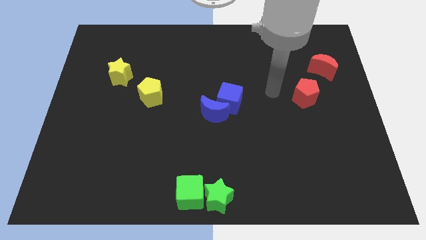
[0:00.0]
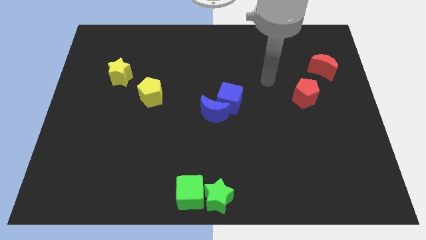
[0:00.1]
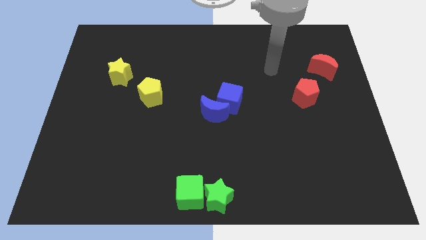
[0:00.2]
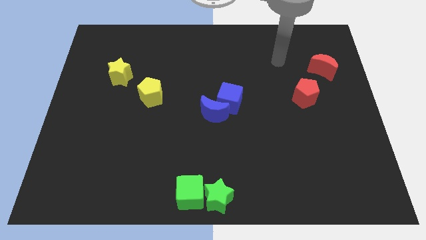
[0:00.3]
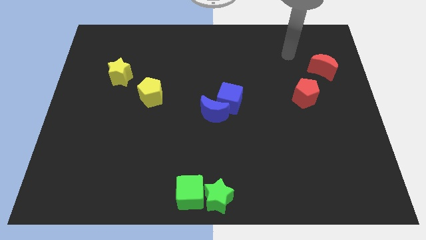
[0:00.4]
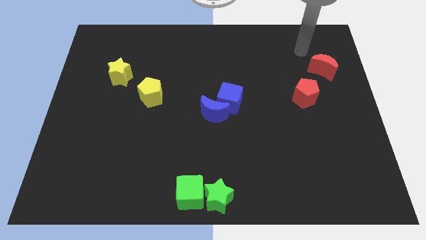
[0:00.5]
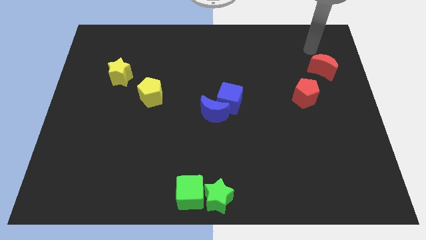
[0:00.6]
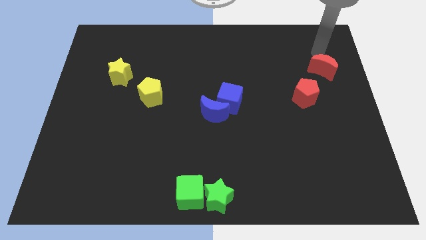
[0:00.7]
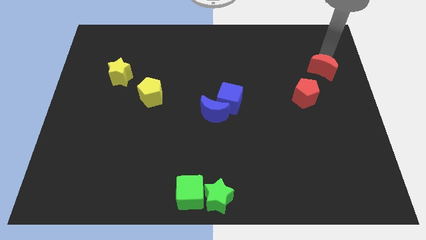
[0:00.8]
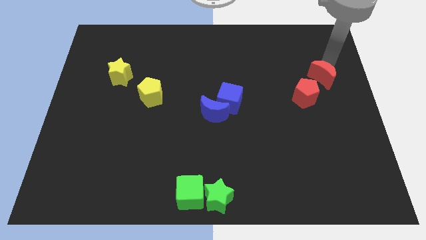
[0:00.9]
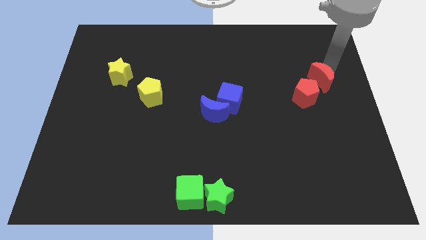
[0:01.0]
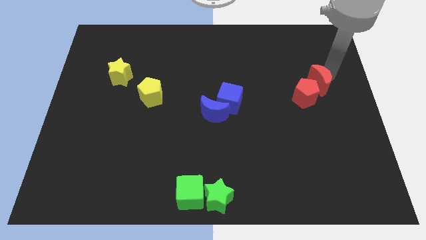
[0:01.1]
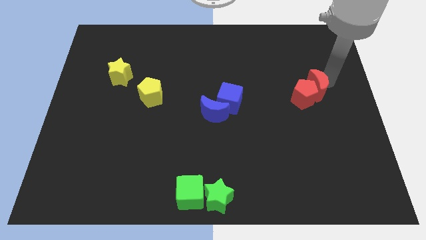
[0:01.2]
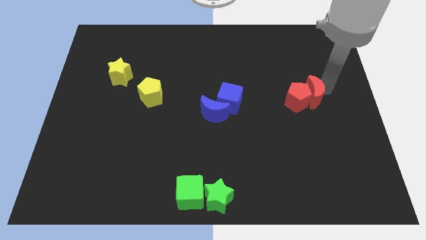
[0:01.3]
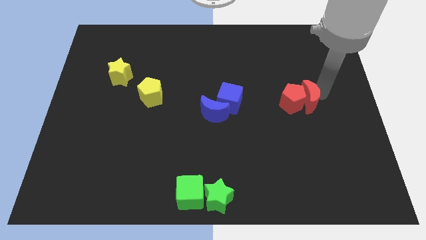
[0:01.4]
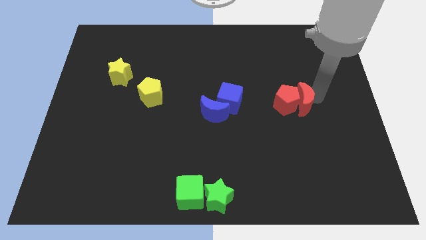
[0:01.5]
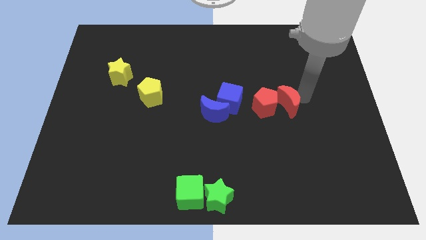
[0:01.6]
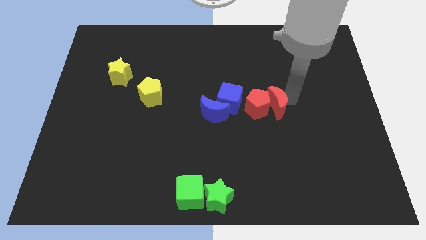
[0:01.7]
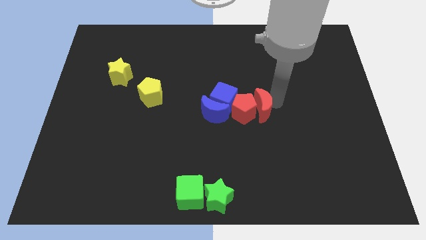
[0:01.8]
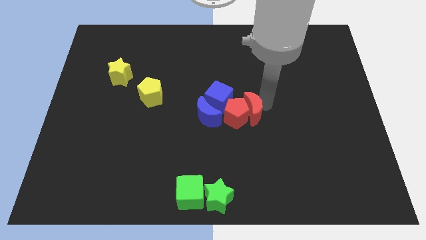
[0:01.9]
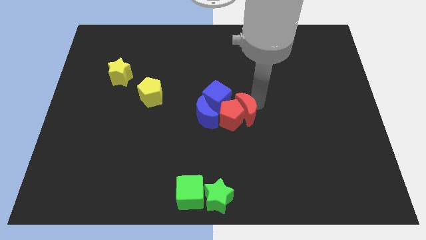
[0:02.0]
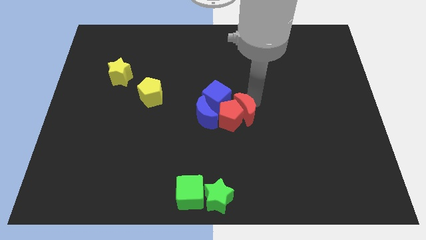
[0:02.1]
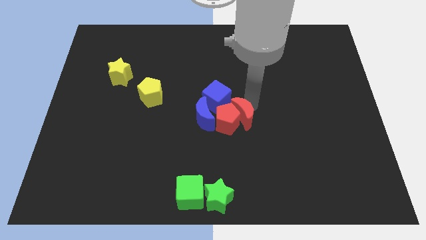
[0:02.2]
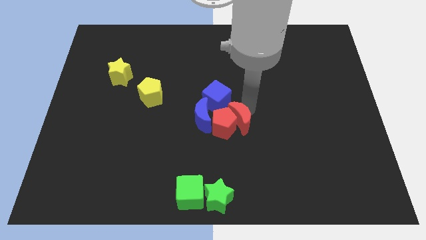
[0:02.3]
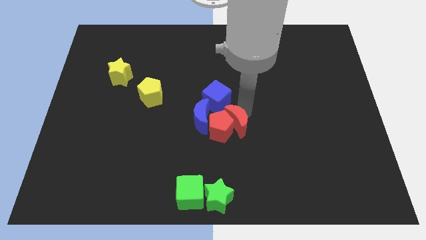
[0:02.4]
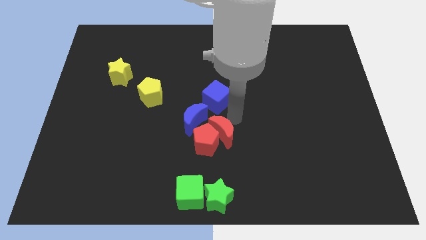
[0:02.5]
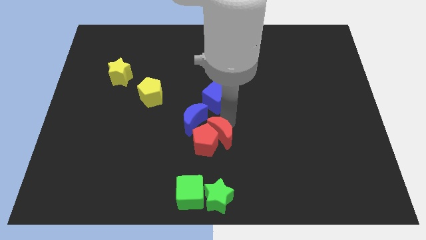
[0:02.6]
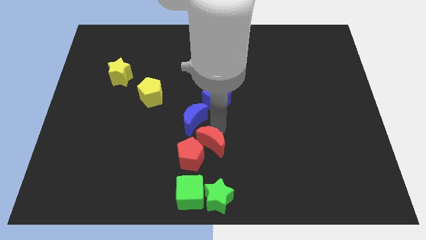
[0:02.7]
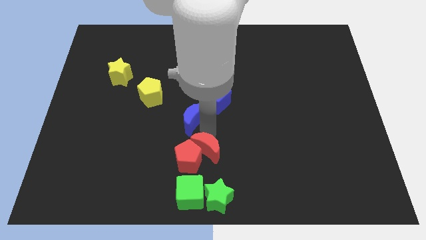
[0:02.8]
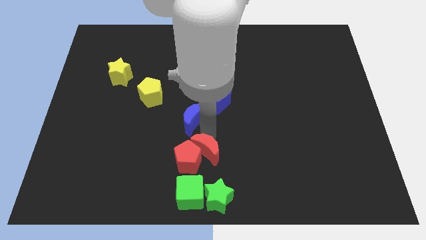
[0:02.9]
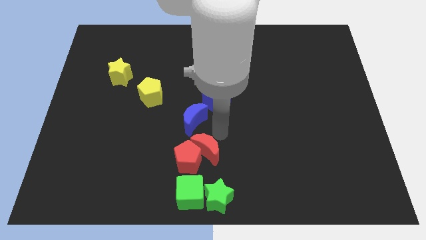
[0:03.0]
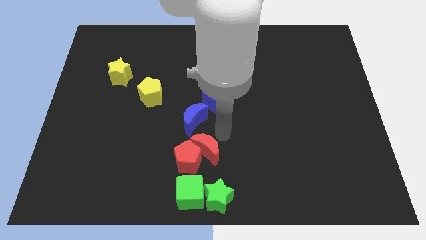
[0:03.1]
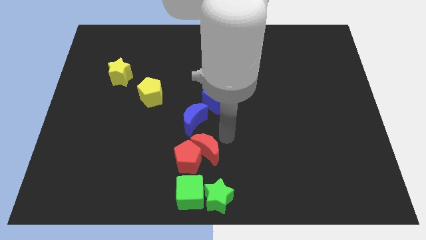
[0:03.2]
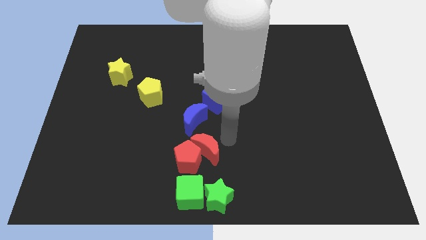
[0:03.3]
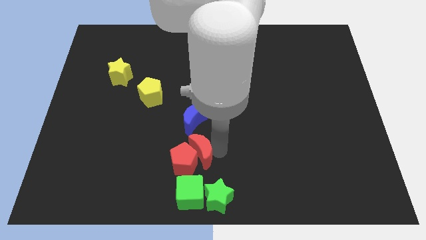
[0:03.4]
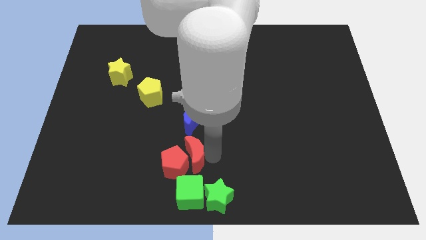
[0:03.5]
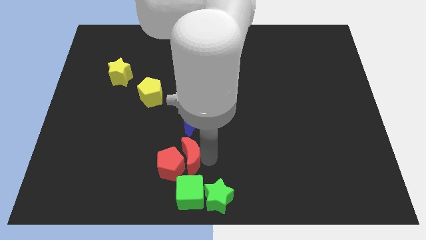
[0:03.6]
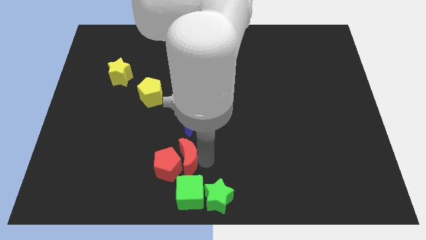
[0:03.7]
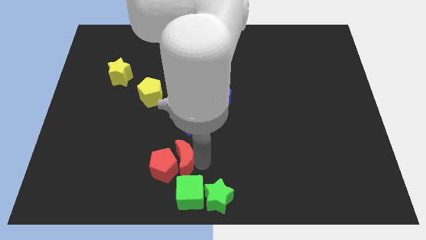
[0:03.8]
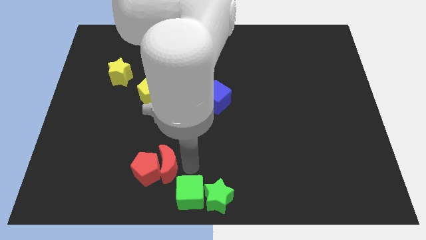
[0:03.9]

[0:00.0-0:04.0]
push the red crescent and red pentagon towards the top of the green cube

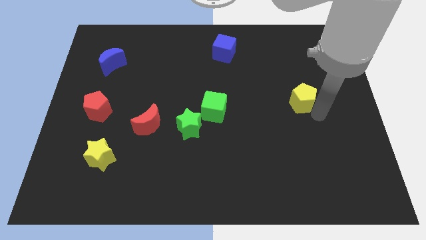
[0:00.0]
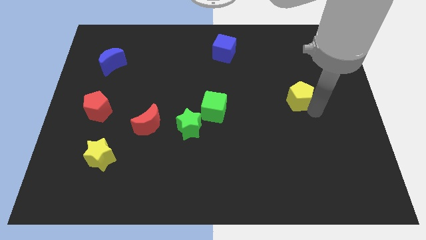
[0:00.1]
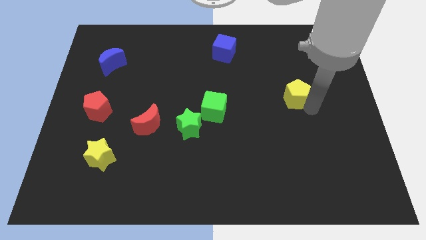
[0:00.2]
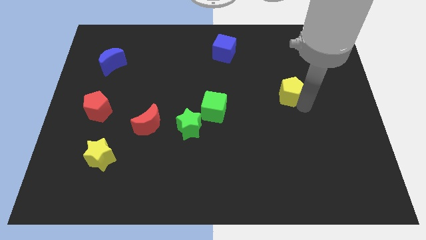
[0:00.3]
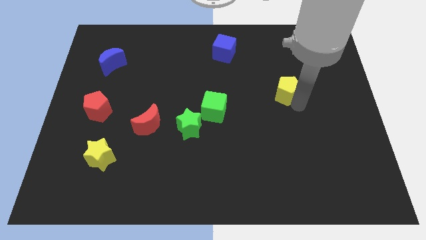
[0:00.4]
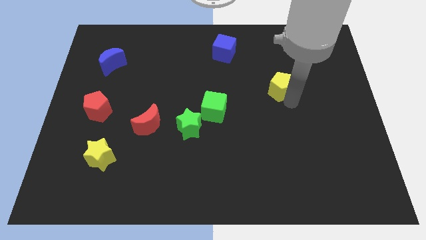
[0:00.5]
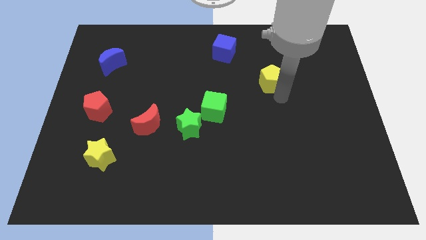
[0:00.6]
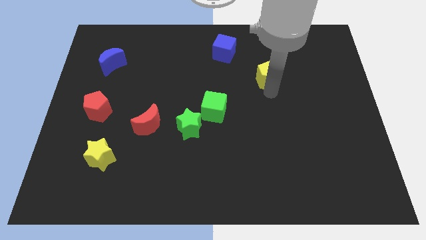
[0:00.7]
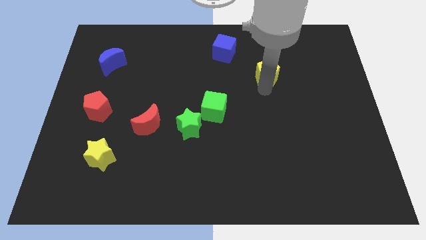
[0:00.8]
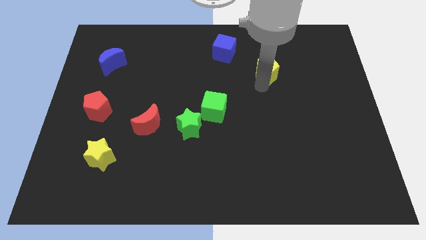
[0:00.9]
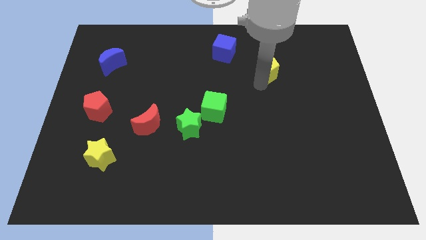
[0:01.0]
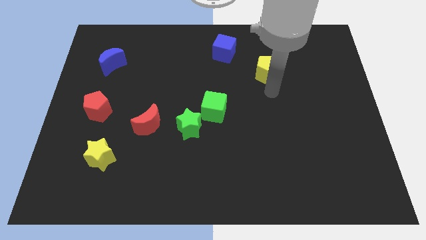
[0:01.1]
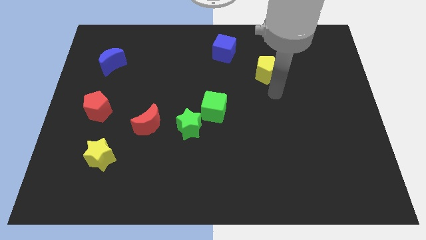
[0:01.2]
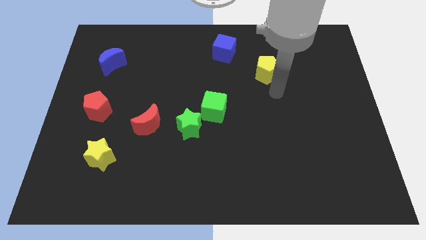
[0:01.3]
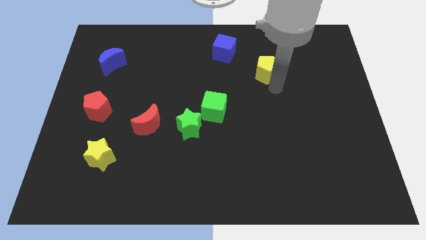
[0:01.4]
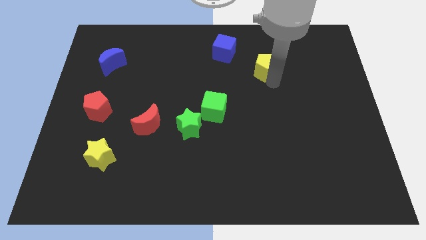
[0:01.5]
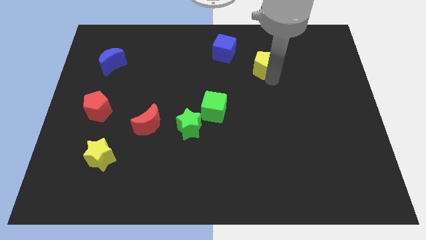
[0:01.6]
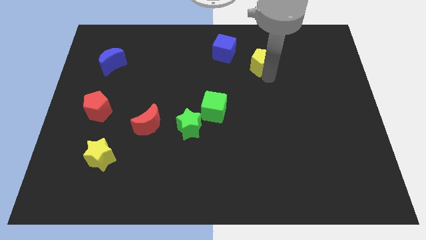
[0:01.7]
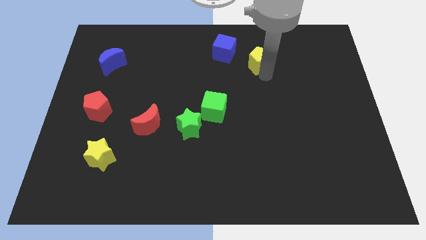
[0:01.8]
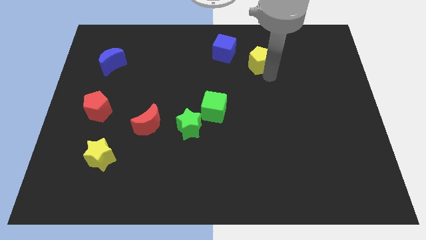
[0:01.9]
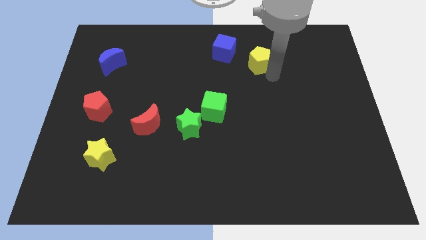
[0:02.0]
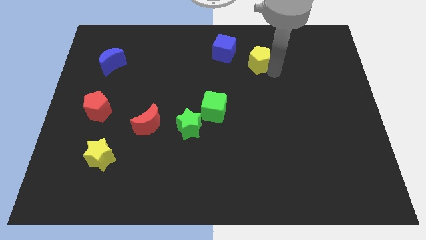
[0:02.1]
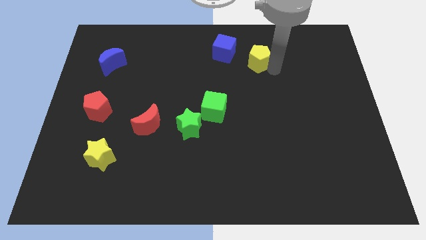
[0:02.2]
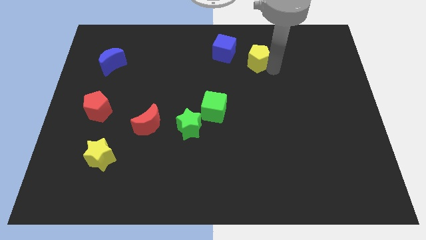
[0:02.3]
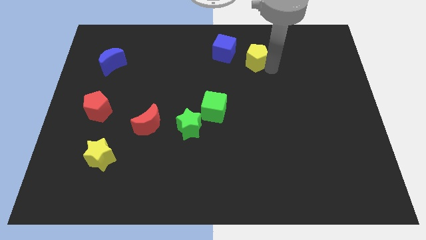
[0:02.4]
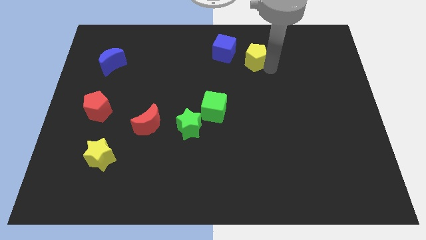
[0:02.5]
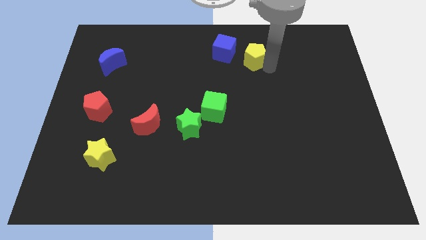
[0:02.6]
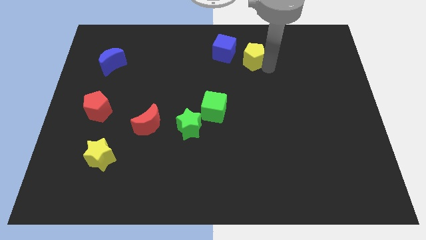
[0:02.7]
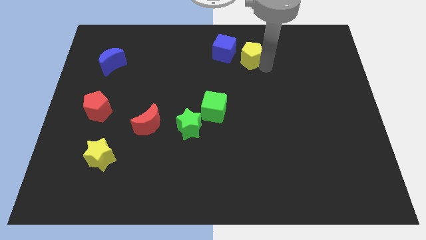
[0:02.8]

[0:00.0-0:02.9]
place the yellow pentagon left to blue cube

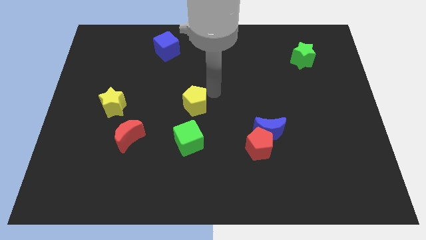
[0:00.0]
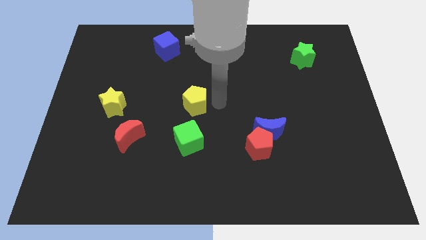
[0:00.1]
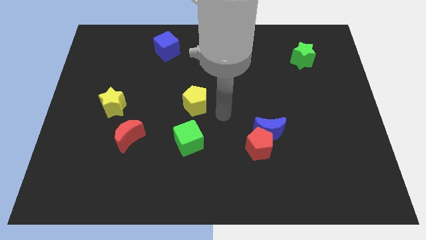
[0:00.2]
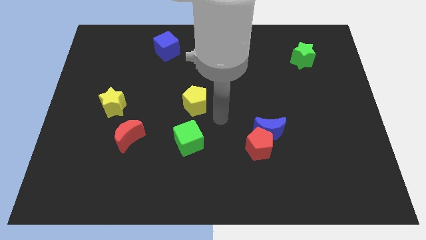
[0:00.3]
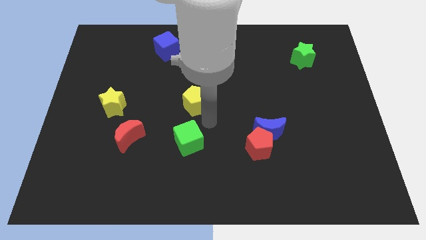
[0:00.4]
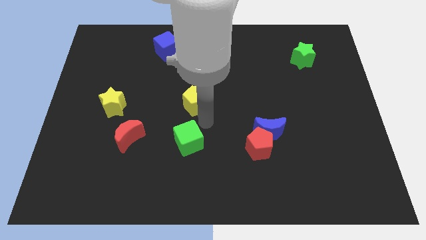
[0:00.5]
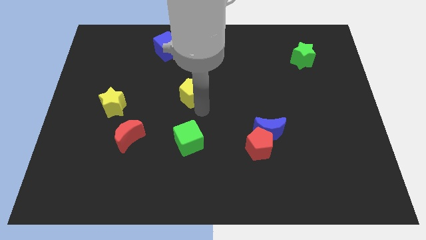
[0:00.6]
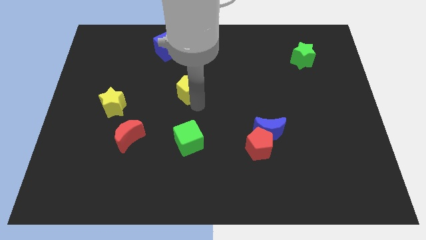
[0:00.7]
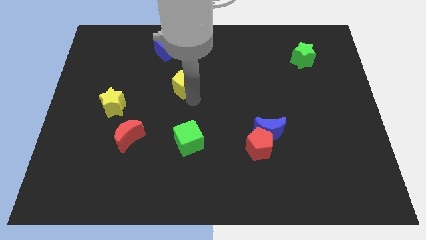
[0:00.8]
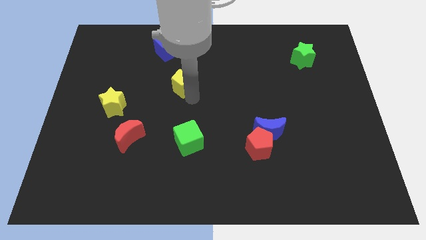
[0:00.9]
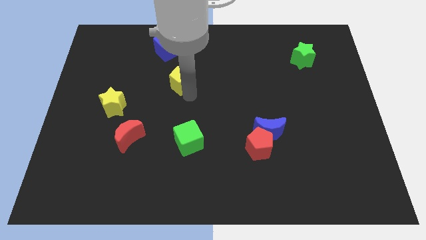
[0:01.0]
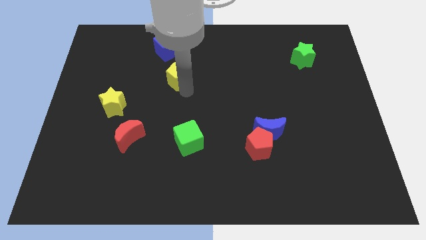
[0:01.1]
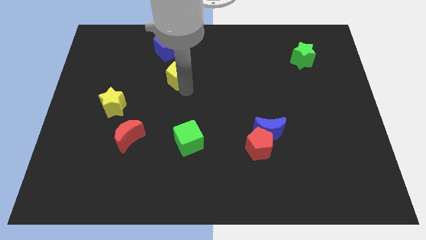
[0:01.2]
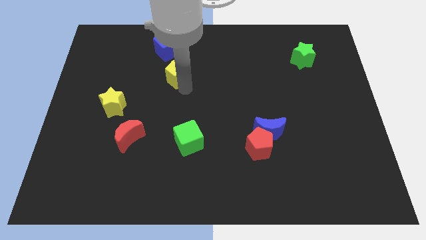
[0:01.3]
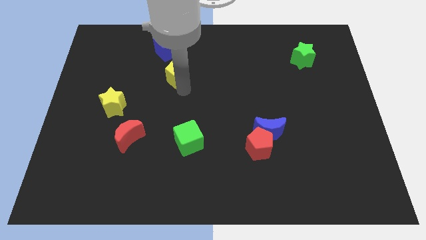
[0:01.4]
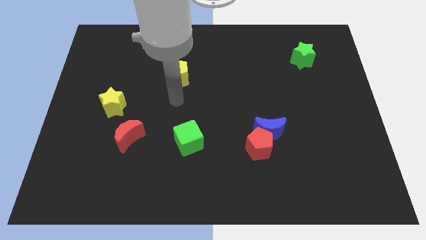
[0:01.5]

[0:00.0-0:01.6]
place yellow pentagon below the blue cube

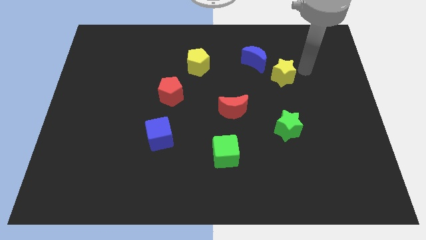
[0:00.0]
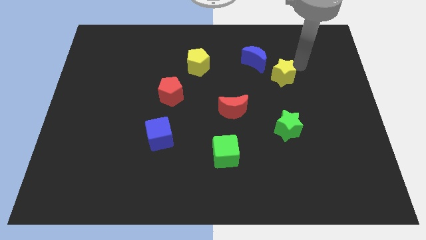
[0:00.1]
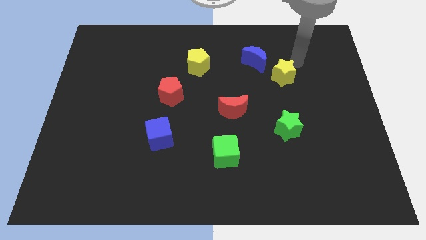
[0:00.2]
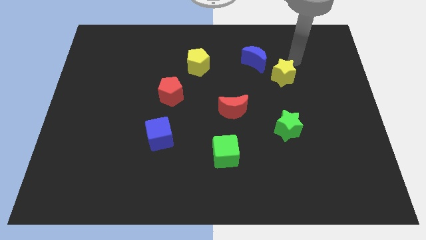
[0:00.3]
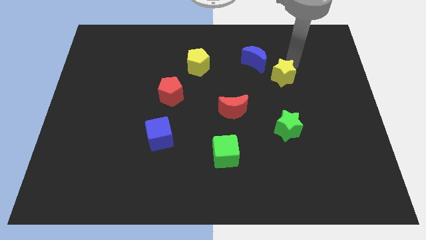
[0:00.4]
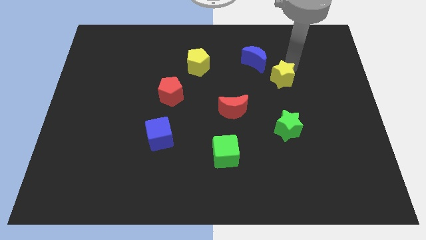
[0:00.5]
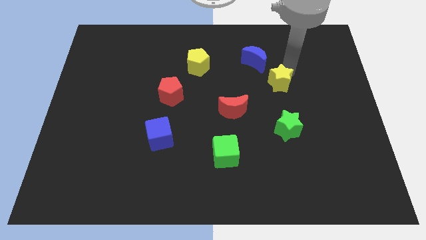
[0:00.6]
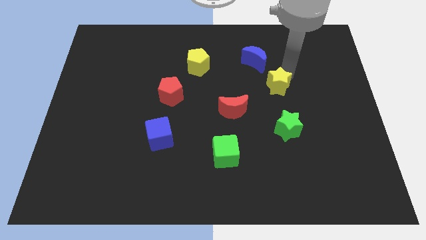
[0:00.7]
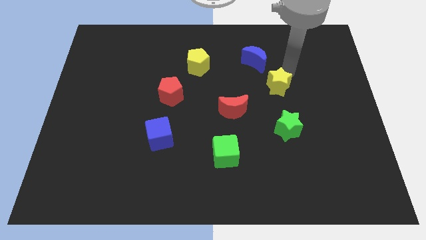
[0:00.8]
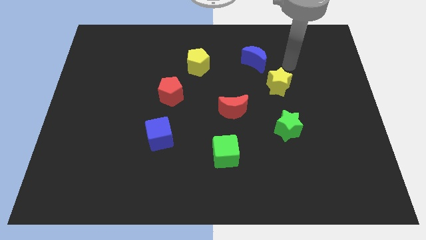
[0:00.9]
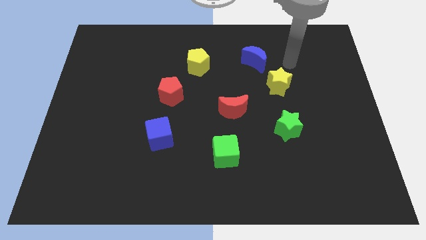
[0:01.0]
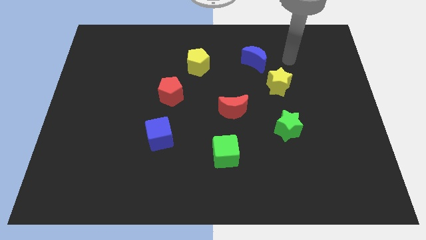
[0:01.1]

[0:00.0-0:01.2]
place yellow star to the bottom right of the blue moon
